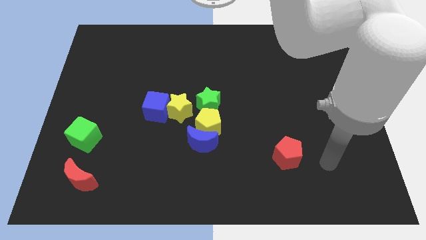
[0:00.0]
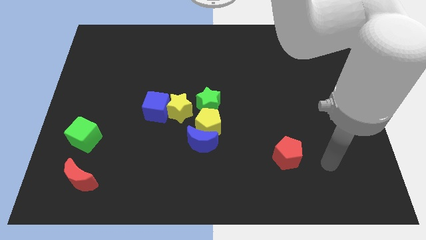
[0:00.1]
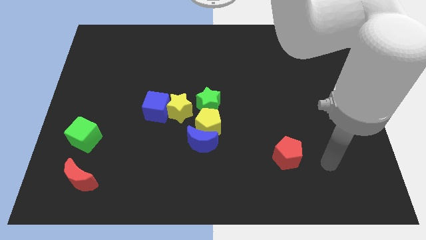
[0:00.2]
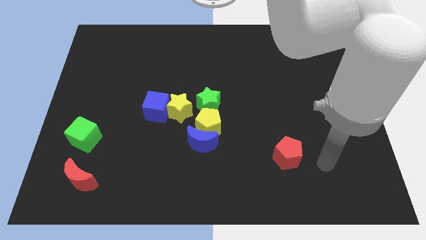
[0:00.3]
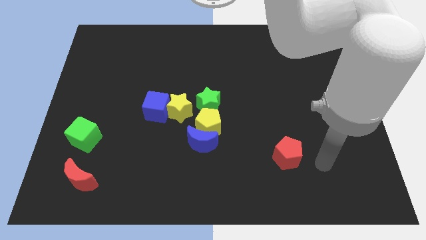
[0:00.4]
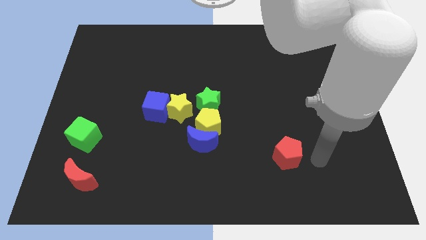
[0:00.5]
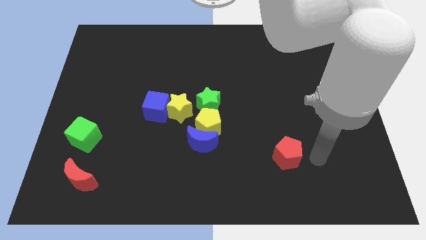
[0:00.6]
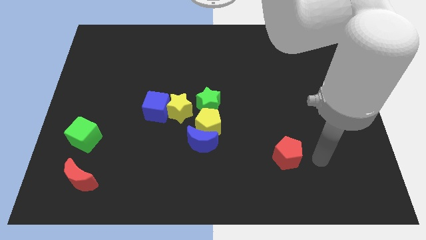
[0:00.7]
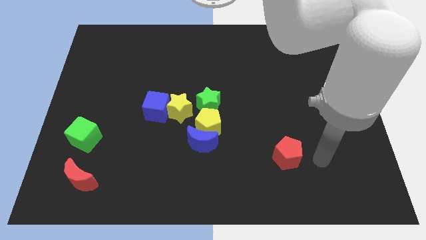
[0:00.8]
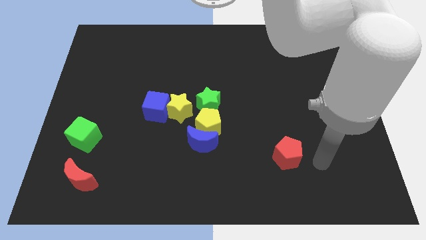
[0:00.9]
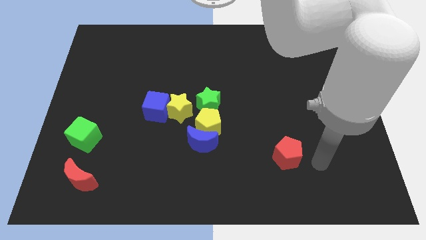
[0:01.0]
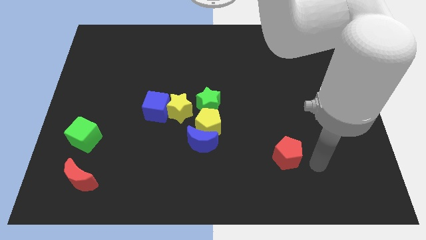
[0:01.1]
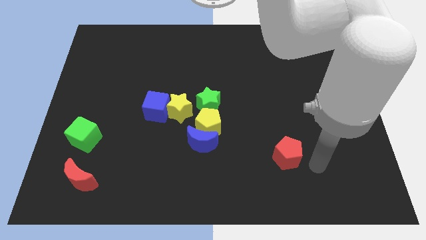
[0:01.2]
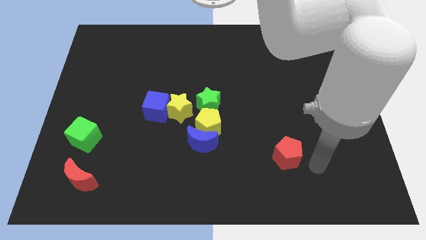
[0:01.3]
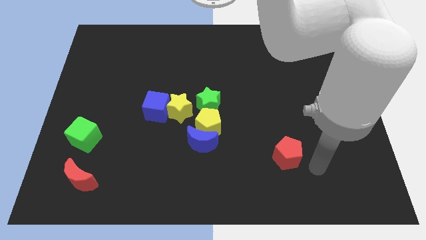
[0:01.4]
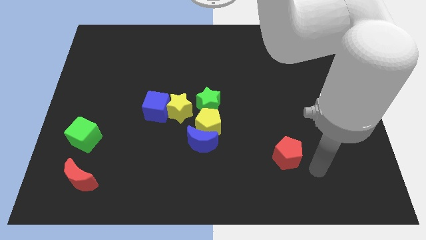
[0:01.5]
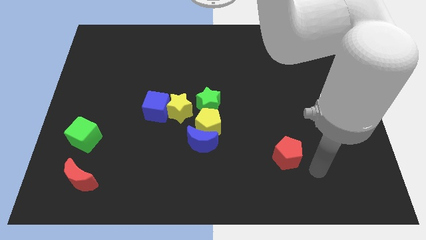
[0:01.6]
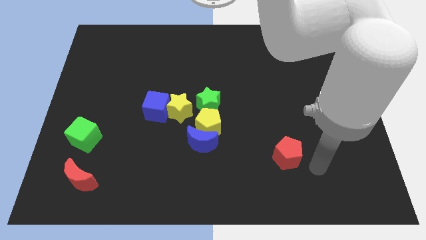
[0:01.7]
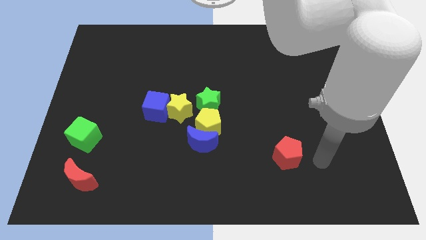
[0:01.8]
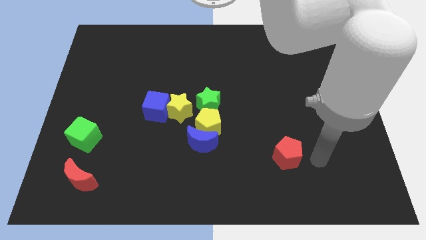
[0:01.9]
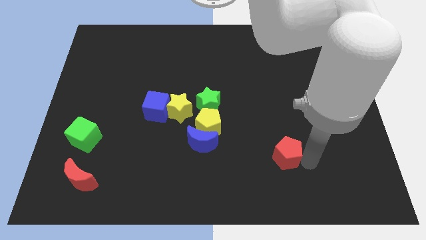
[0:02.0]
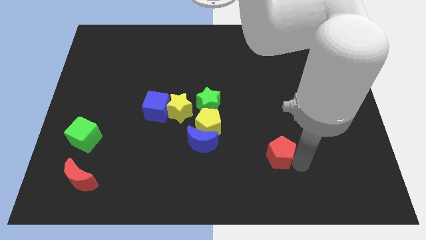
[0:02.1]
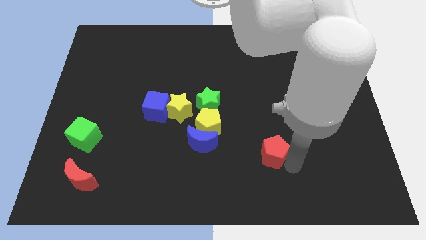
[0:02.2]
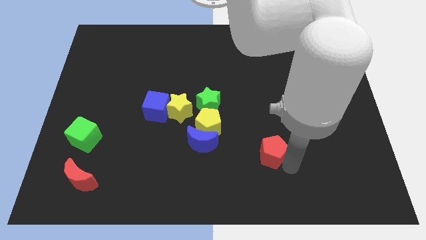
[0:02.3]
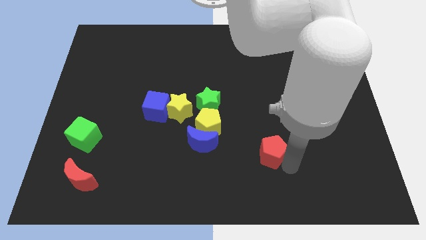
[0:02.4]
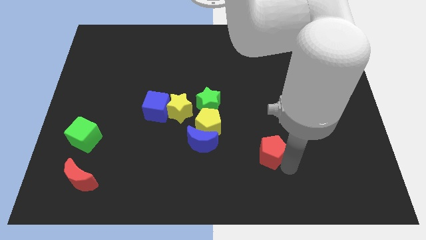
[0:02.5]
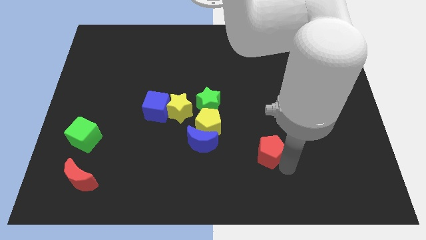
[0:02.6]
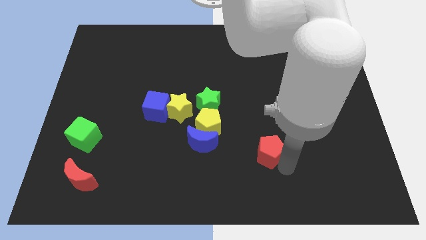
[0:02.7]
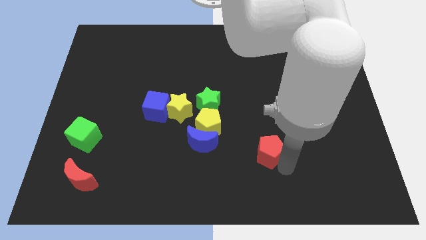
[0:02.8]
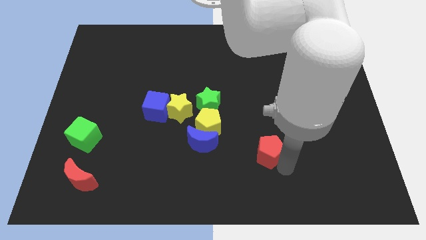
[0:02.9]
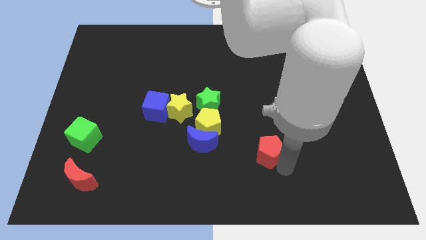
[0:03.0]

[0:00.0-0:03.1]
slightly move the red pentagon

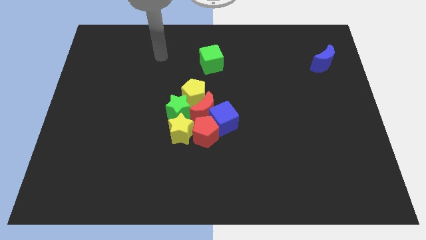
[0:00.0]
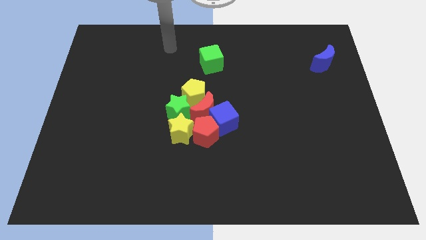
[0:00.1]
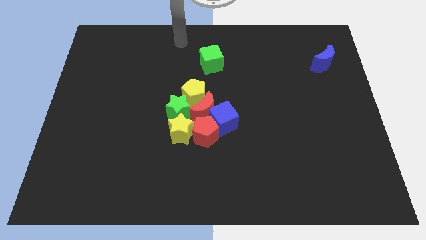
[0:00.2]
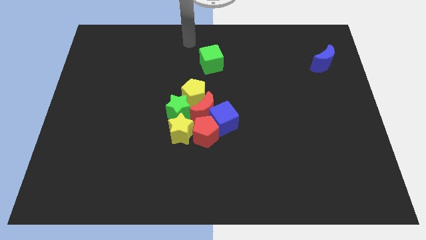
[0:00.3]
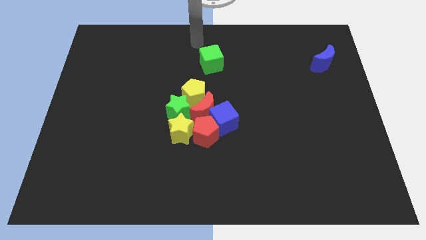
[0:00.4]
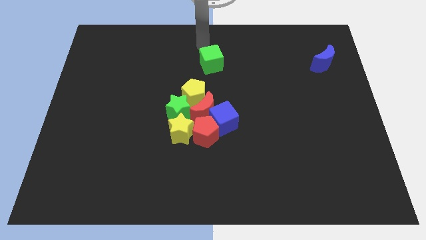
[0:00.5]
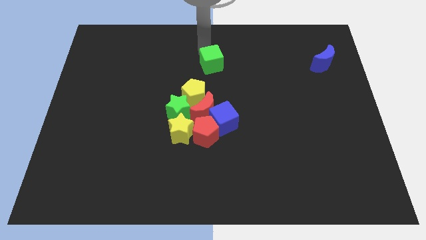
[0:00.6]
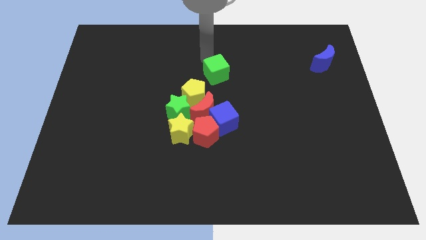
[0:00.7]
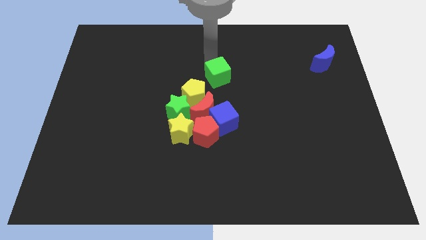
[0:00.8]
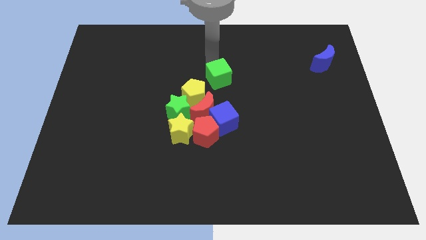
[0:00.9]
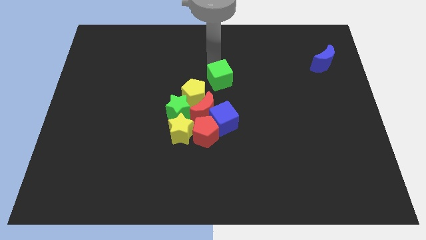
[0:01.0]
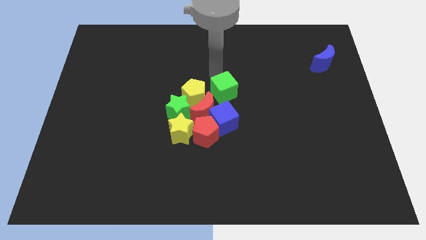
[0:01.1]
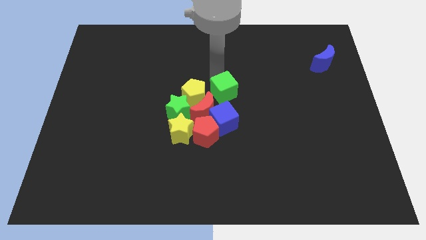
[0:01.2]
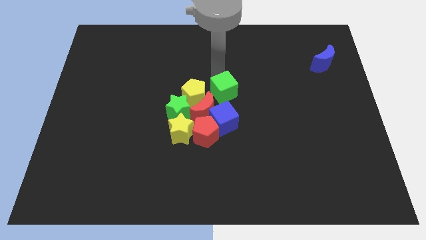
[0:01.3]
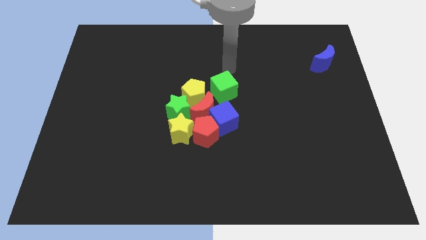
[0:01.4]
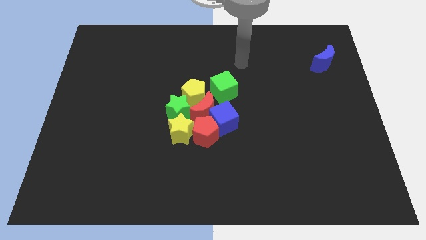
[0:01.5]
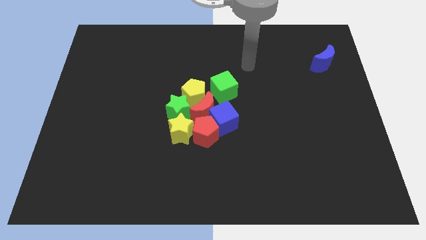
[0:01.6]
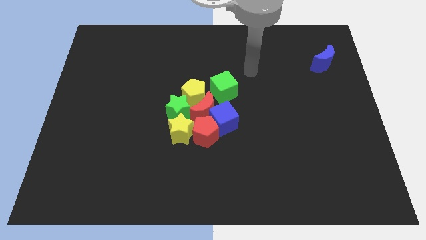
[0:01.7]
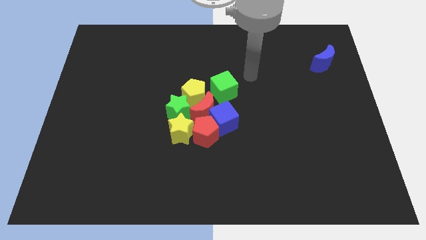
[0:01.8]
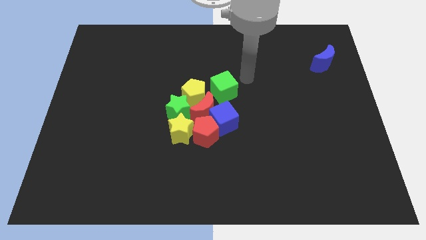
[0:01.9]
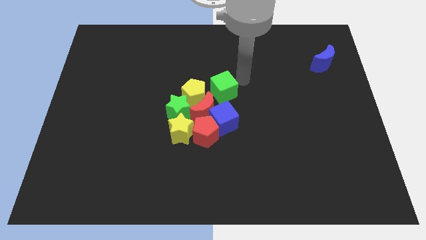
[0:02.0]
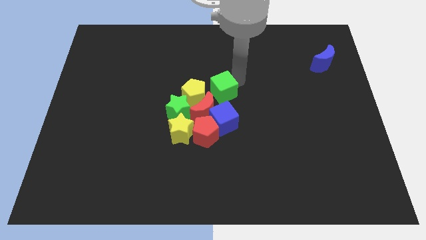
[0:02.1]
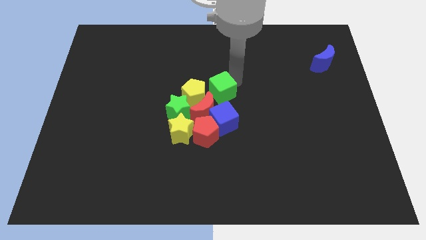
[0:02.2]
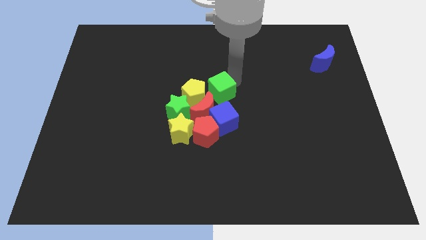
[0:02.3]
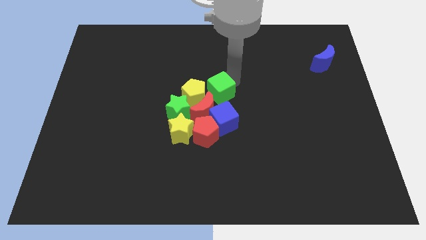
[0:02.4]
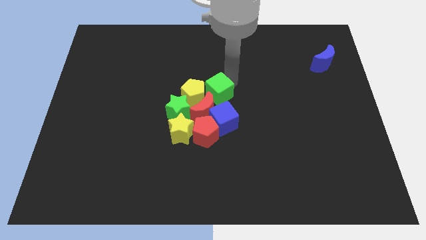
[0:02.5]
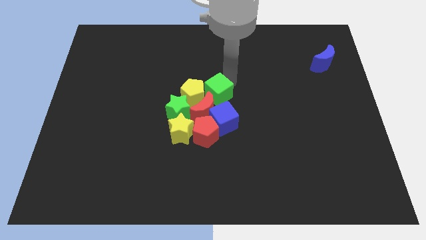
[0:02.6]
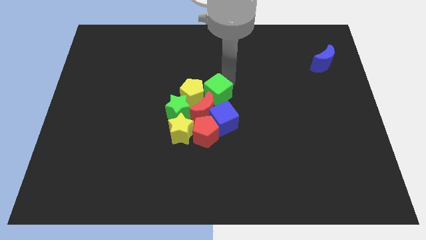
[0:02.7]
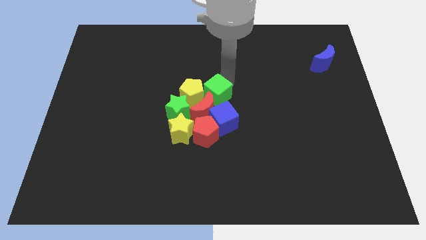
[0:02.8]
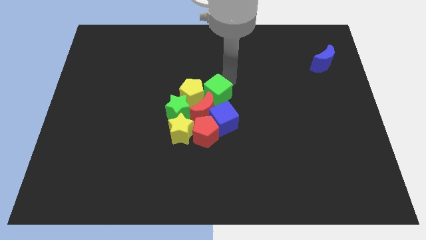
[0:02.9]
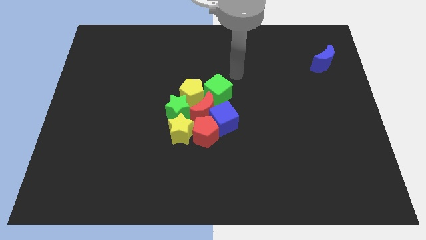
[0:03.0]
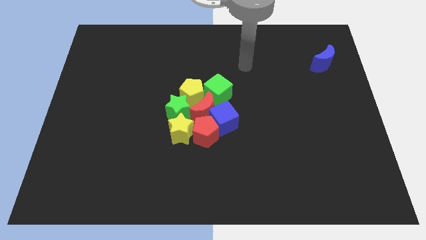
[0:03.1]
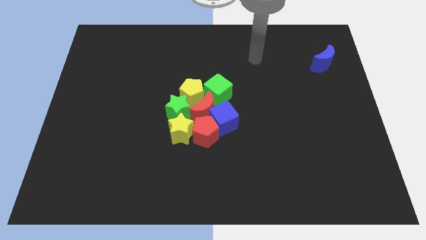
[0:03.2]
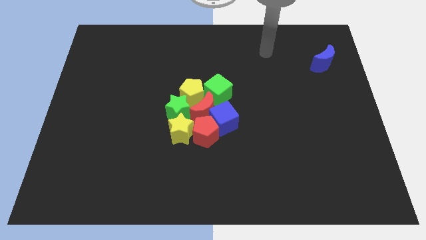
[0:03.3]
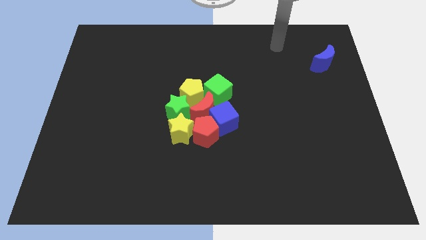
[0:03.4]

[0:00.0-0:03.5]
move green cube into the circle

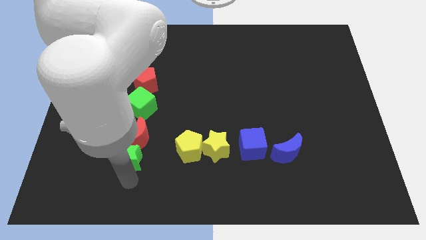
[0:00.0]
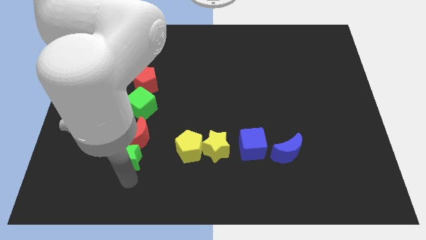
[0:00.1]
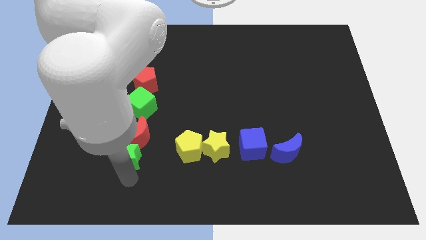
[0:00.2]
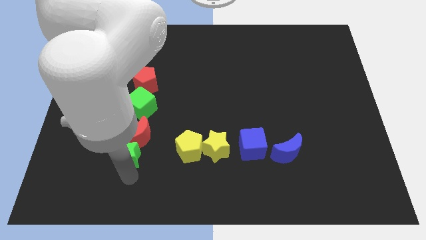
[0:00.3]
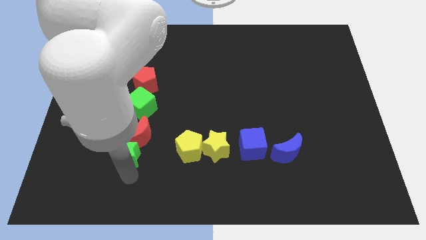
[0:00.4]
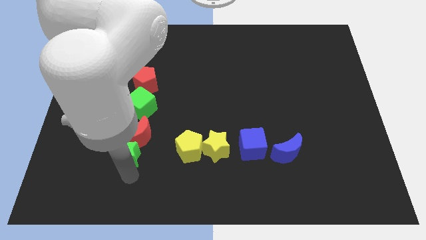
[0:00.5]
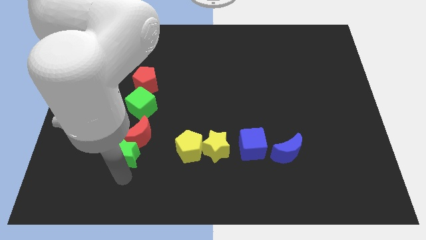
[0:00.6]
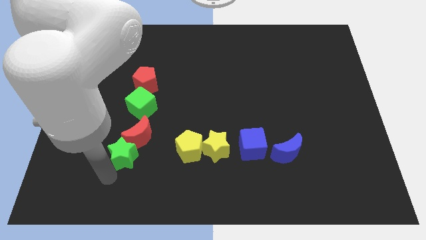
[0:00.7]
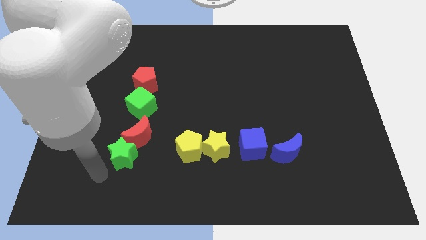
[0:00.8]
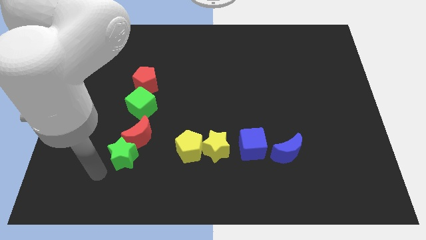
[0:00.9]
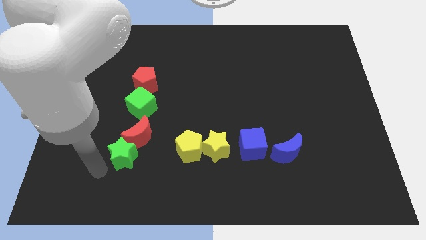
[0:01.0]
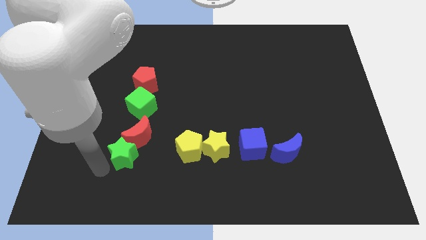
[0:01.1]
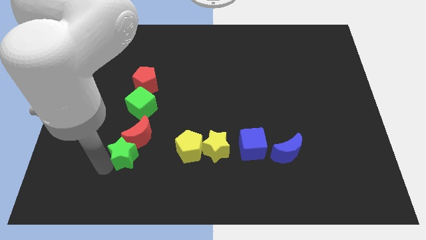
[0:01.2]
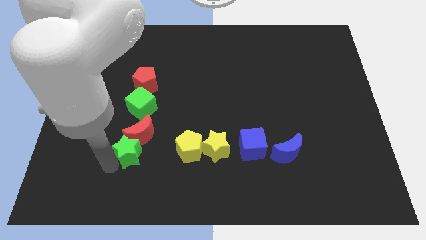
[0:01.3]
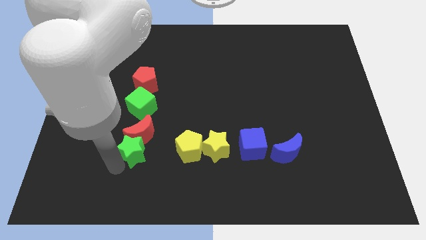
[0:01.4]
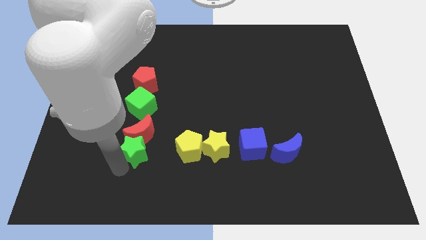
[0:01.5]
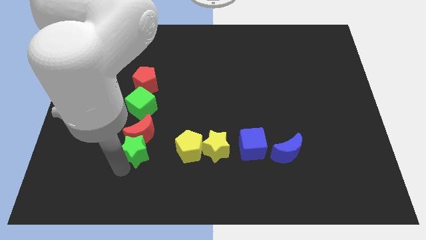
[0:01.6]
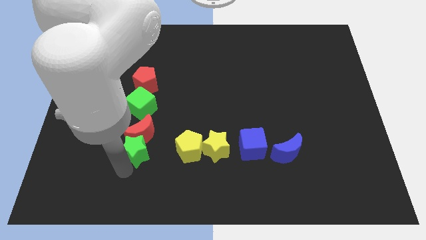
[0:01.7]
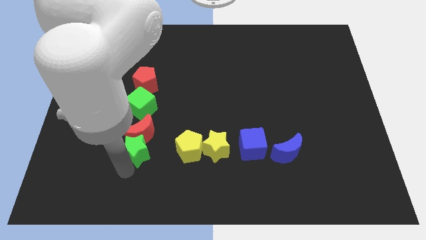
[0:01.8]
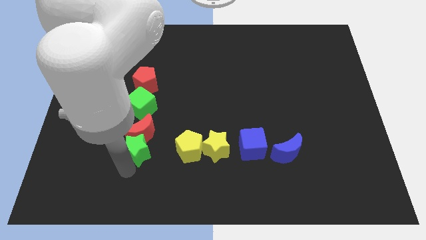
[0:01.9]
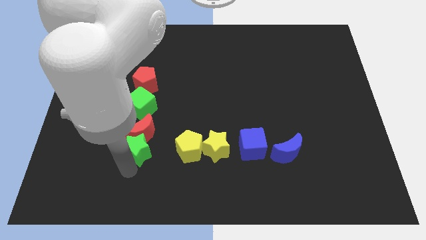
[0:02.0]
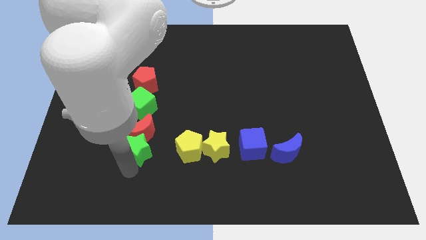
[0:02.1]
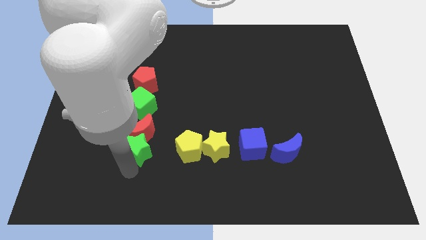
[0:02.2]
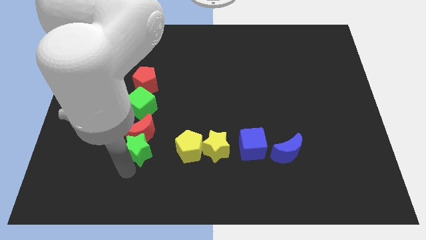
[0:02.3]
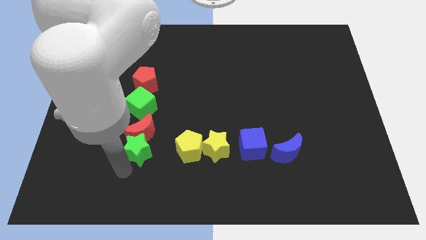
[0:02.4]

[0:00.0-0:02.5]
move the green star along with red crescent into the green cube
